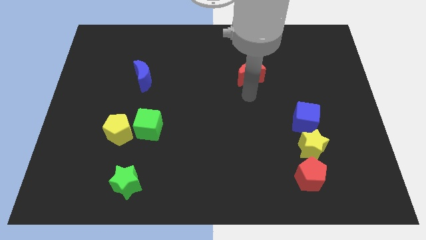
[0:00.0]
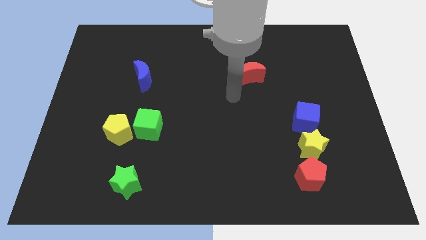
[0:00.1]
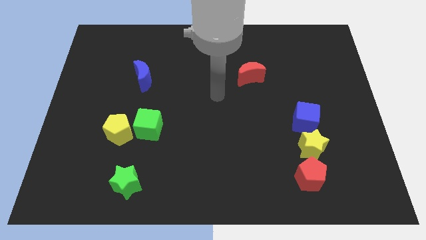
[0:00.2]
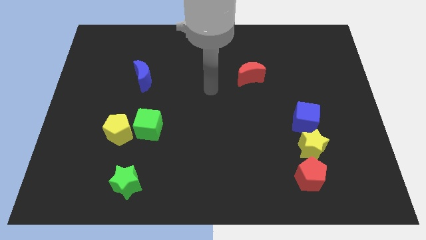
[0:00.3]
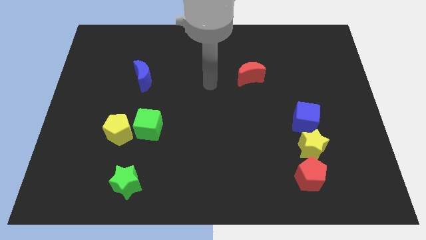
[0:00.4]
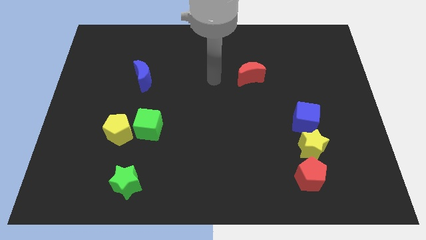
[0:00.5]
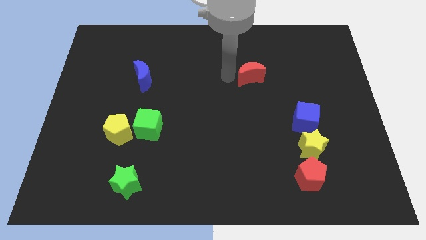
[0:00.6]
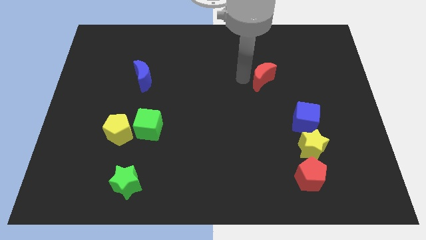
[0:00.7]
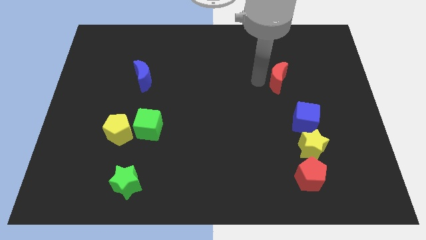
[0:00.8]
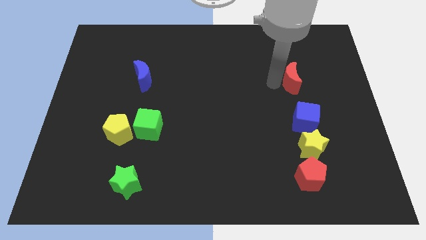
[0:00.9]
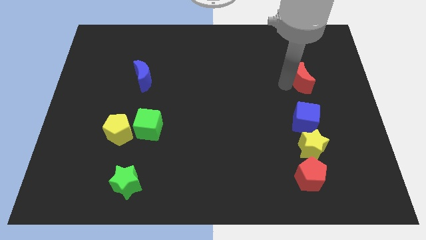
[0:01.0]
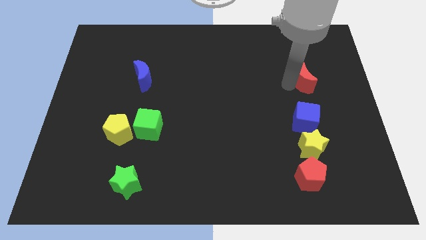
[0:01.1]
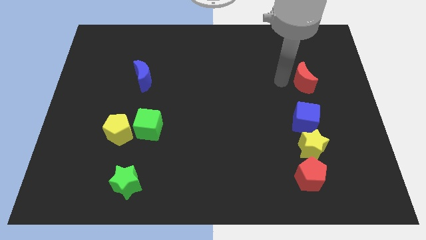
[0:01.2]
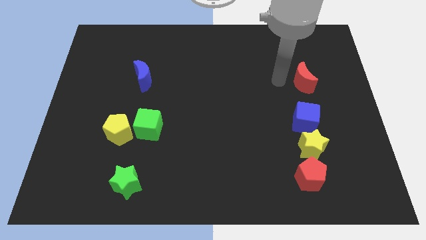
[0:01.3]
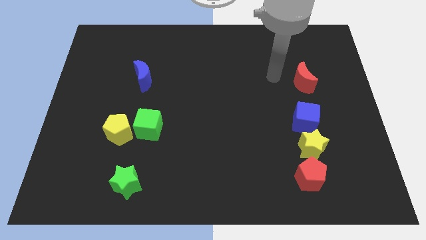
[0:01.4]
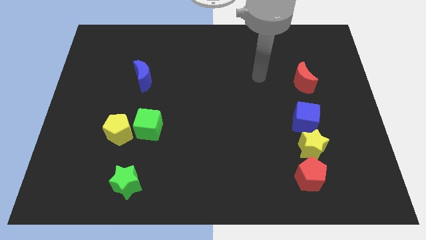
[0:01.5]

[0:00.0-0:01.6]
drag the red moon on top of blue cube

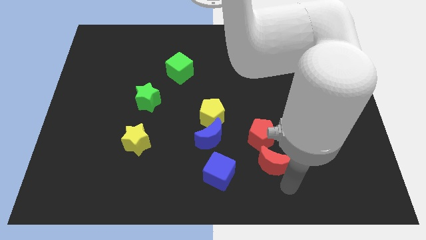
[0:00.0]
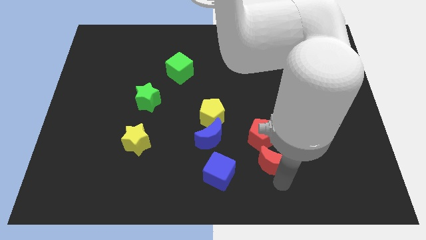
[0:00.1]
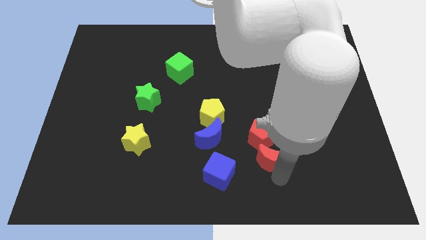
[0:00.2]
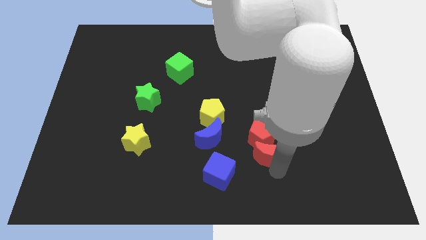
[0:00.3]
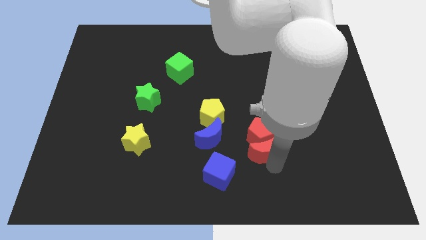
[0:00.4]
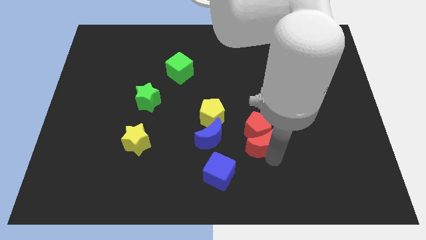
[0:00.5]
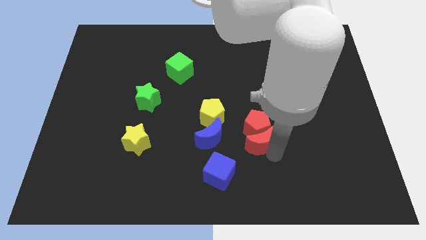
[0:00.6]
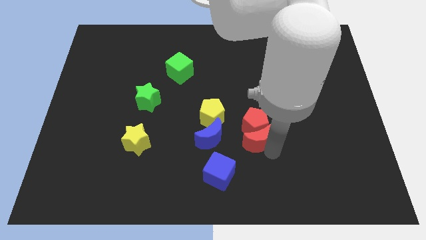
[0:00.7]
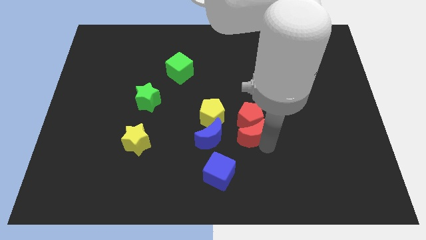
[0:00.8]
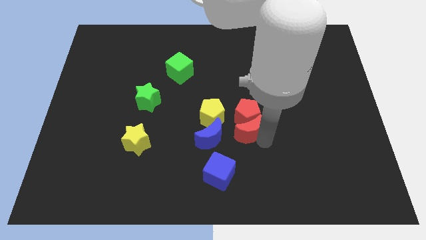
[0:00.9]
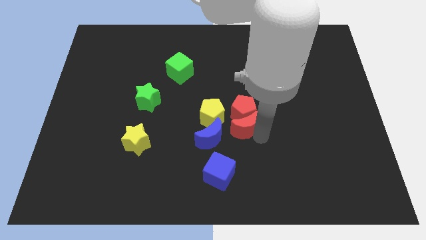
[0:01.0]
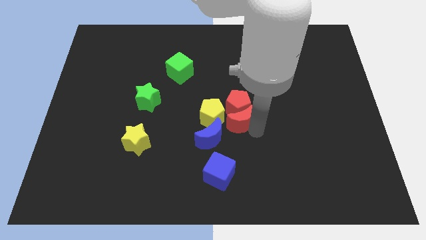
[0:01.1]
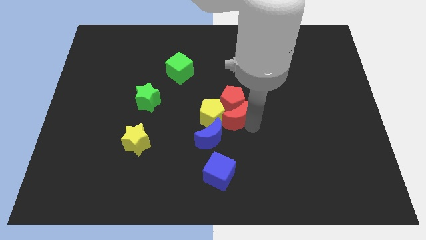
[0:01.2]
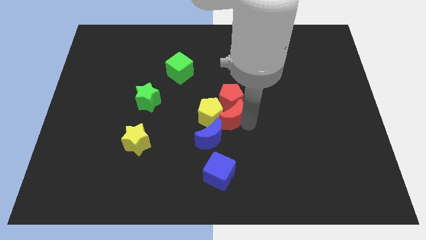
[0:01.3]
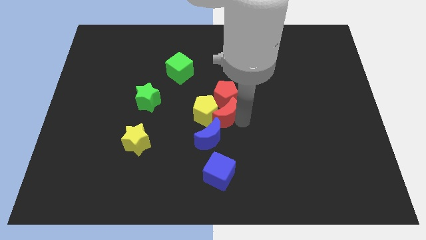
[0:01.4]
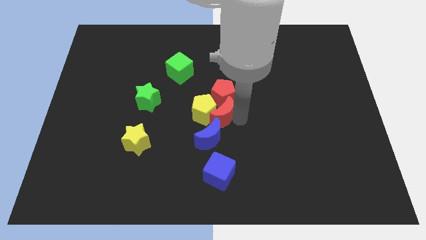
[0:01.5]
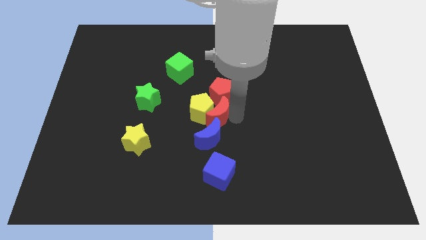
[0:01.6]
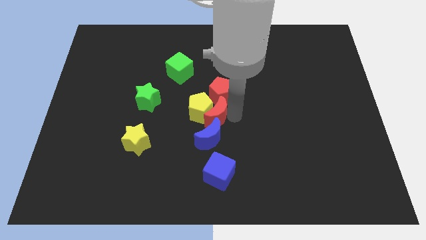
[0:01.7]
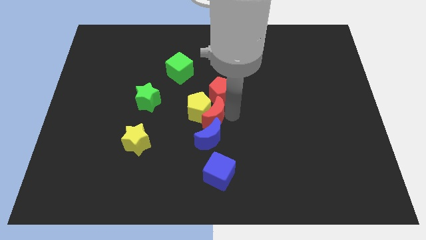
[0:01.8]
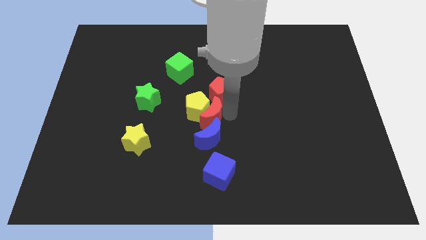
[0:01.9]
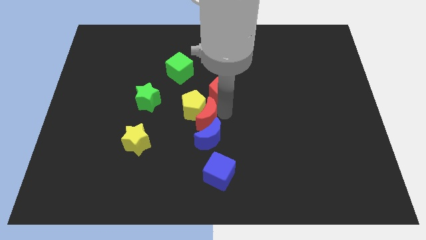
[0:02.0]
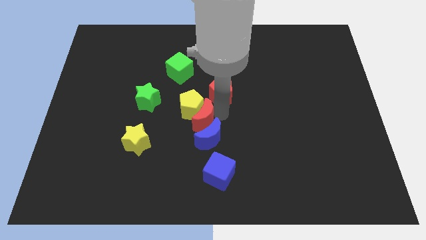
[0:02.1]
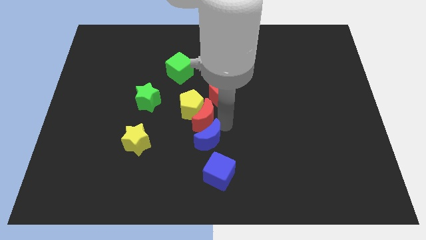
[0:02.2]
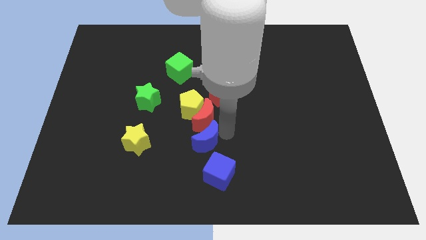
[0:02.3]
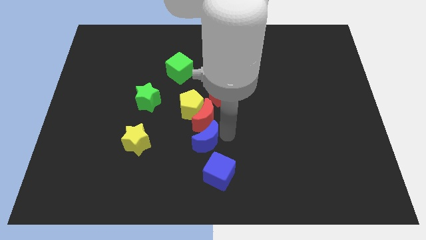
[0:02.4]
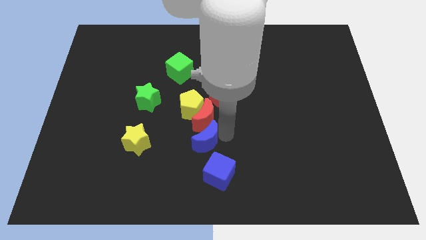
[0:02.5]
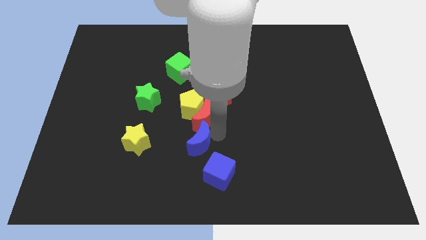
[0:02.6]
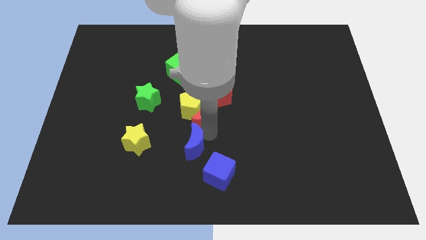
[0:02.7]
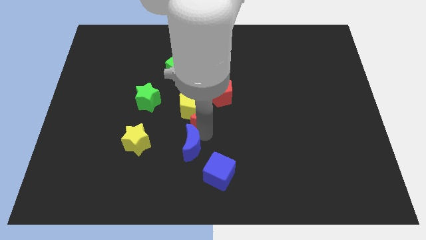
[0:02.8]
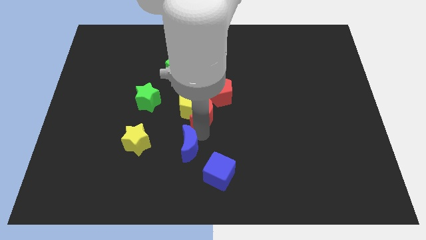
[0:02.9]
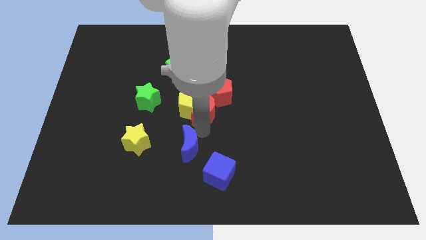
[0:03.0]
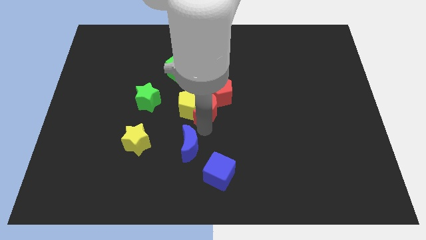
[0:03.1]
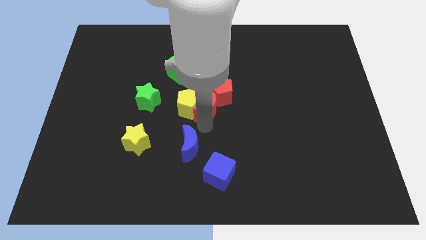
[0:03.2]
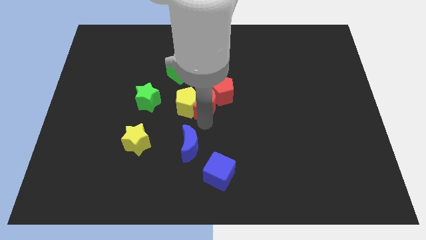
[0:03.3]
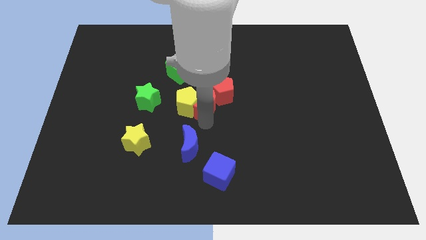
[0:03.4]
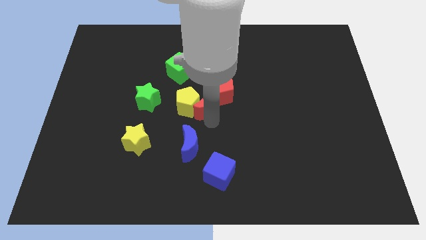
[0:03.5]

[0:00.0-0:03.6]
push the red crescent to the center of the board

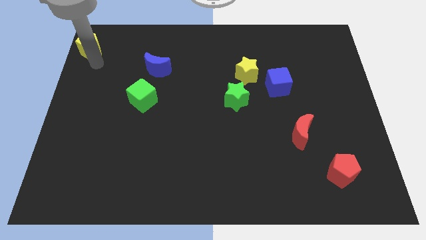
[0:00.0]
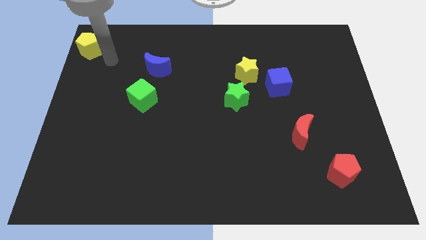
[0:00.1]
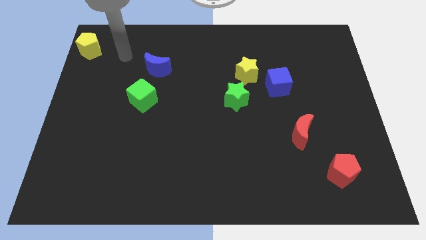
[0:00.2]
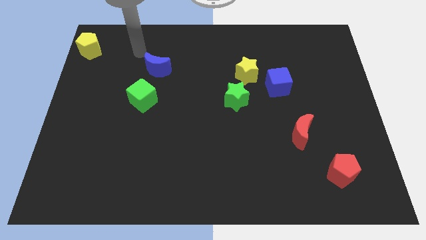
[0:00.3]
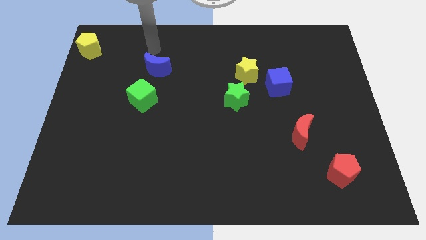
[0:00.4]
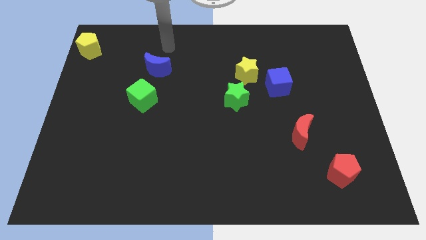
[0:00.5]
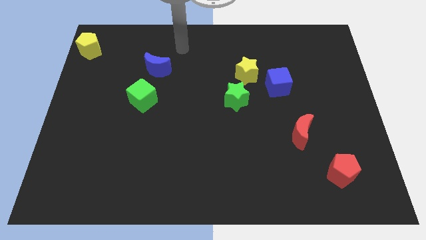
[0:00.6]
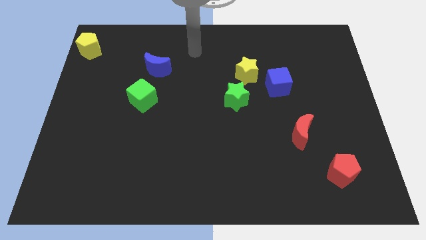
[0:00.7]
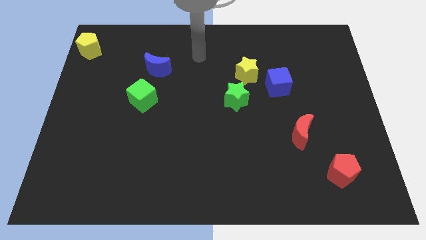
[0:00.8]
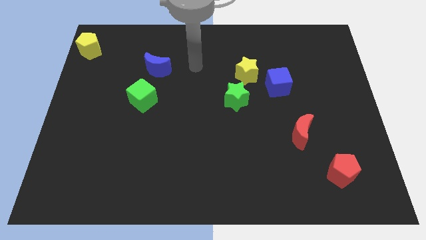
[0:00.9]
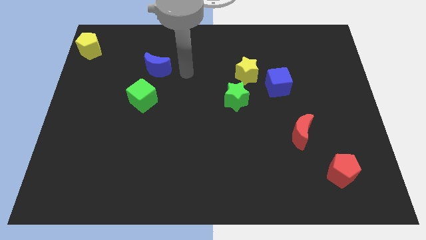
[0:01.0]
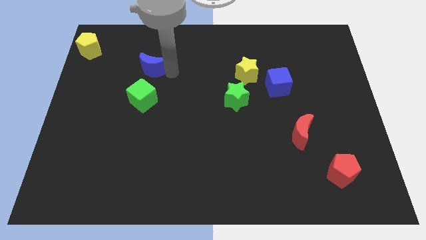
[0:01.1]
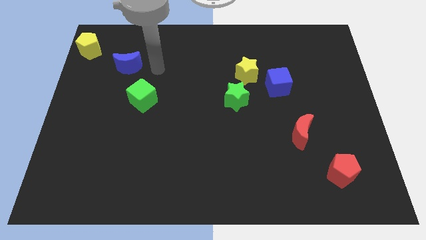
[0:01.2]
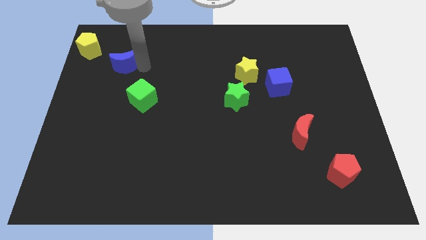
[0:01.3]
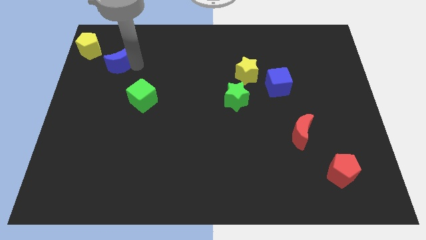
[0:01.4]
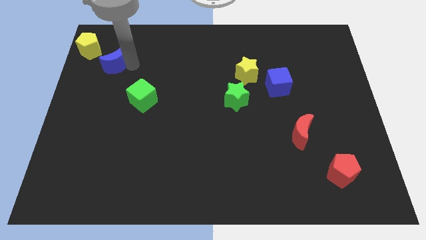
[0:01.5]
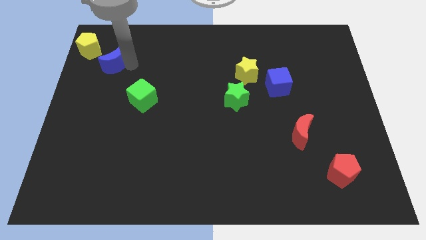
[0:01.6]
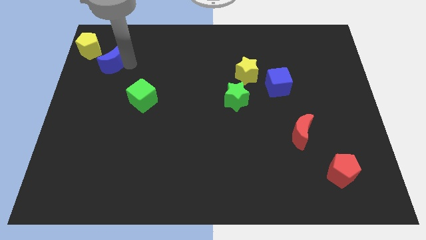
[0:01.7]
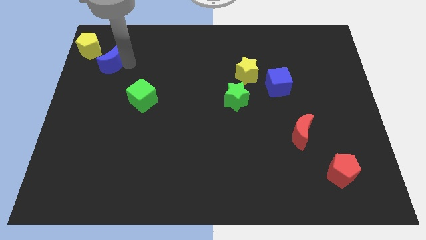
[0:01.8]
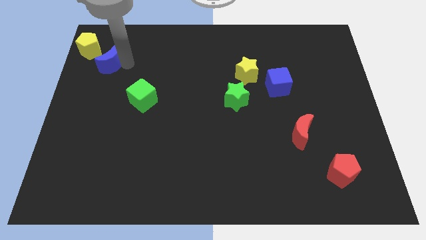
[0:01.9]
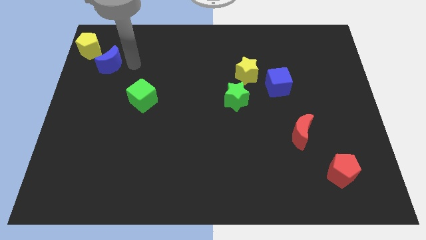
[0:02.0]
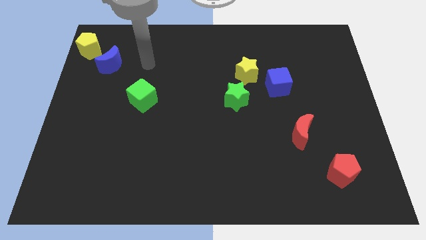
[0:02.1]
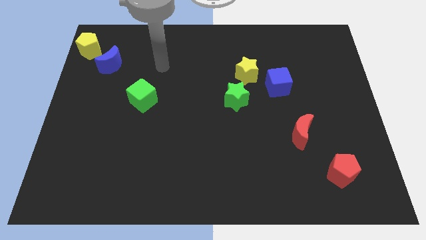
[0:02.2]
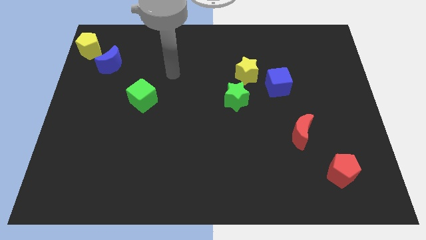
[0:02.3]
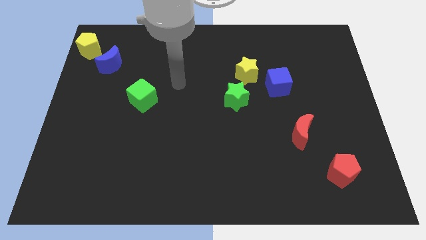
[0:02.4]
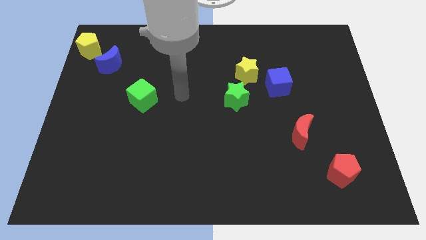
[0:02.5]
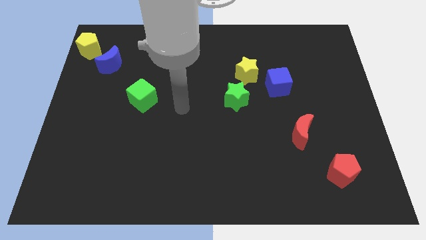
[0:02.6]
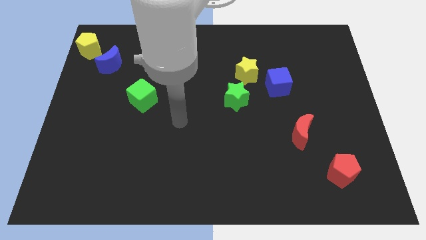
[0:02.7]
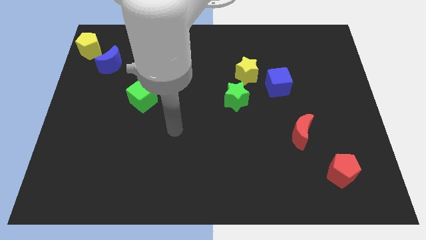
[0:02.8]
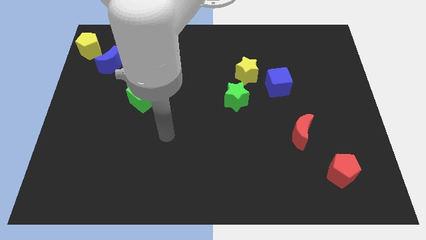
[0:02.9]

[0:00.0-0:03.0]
push the blue moon towards the left

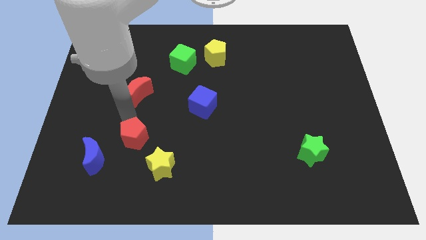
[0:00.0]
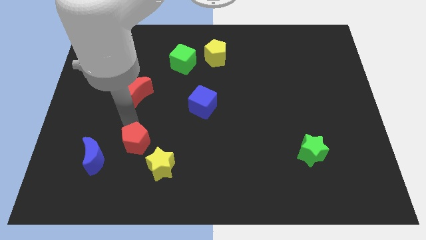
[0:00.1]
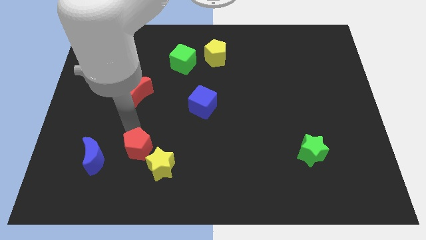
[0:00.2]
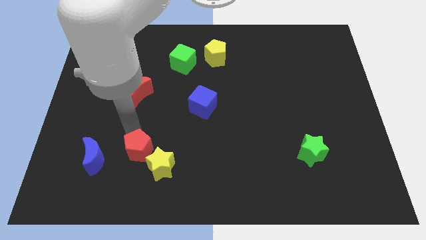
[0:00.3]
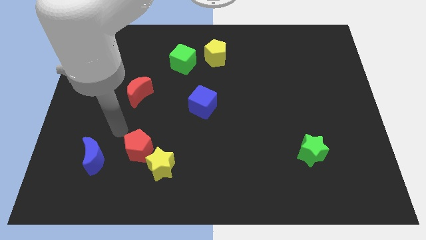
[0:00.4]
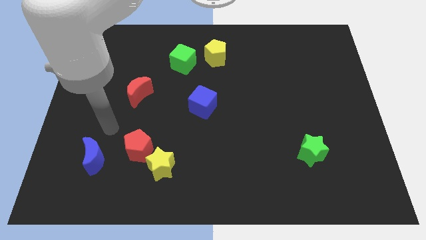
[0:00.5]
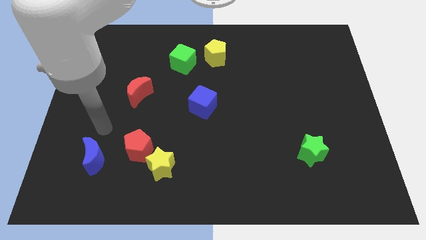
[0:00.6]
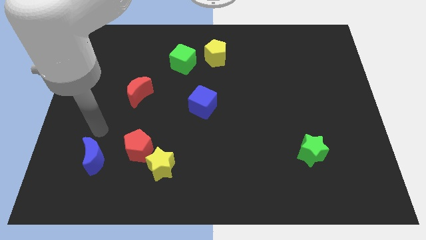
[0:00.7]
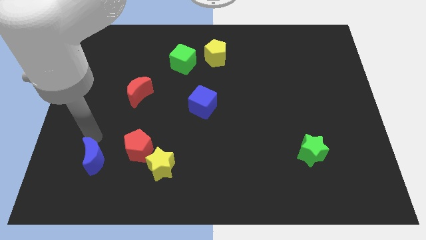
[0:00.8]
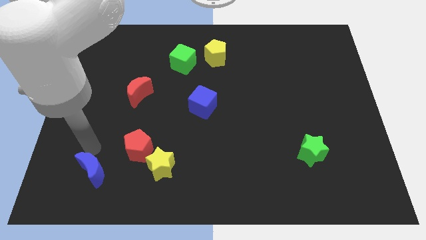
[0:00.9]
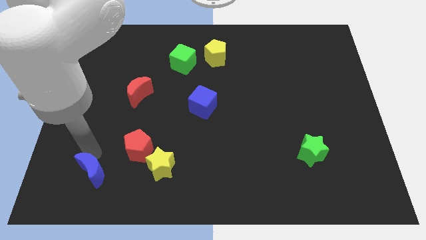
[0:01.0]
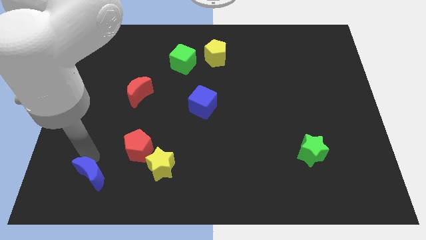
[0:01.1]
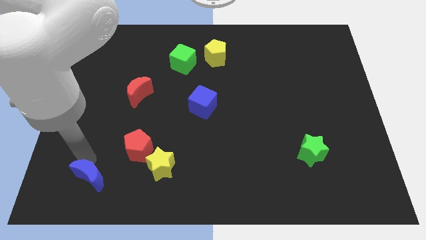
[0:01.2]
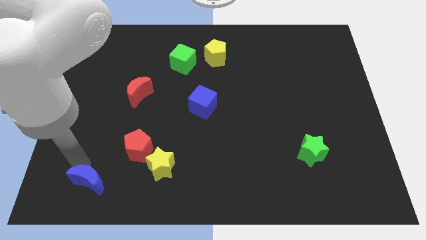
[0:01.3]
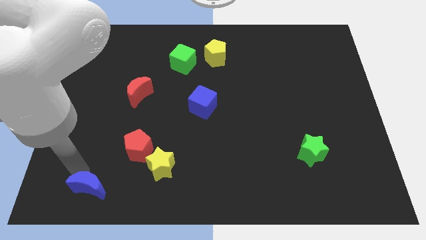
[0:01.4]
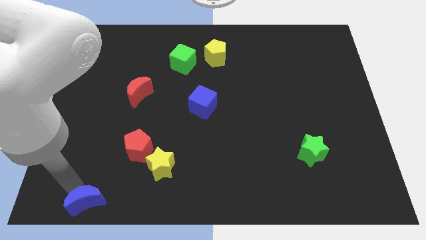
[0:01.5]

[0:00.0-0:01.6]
push the red pentagon towards the yellow star
